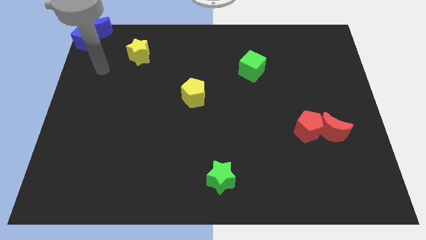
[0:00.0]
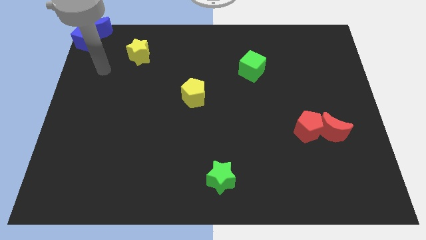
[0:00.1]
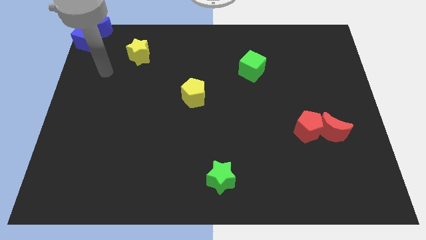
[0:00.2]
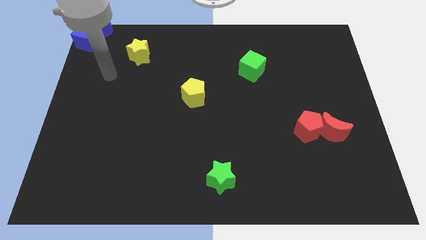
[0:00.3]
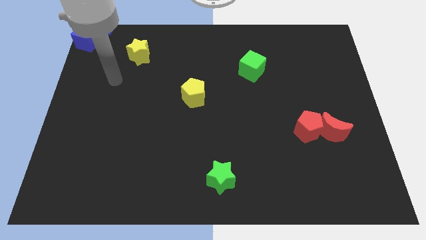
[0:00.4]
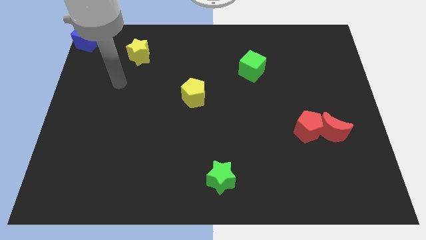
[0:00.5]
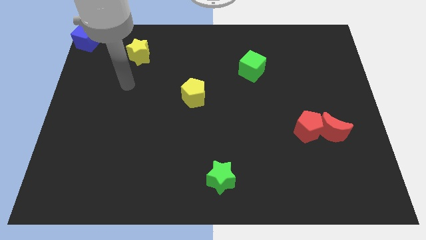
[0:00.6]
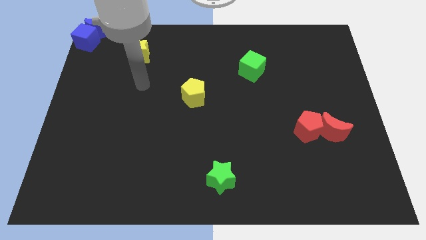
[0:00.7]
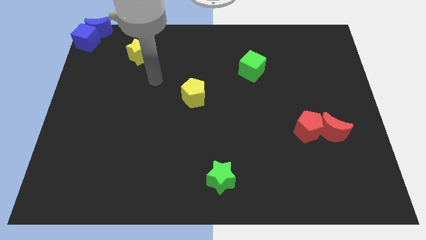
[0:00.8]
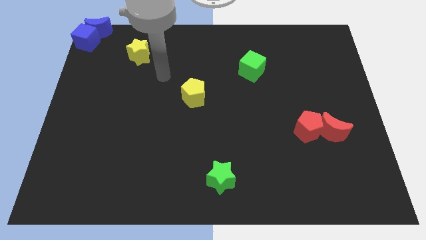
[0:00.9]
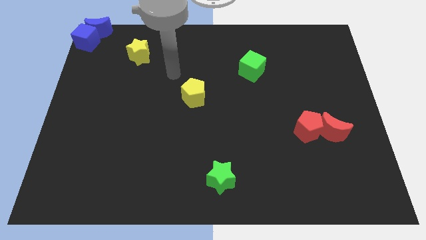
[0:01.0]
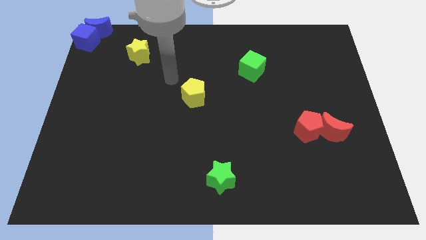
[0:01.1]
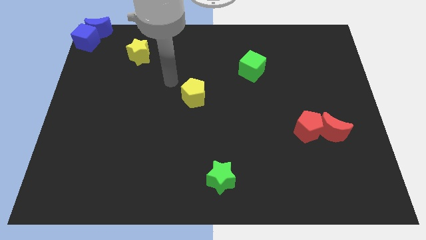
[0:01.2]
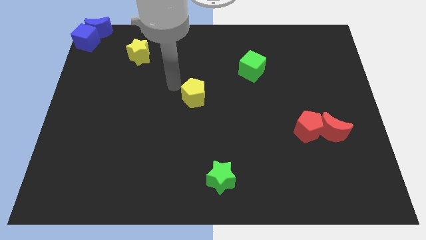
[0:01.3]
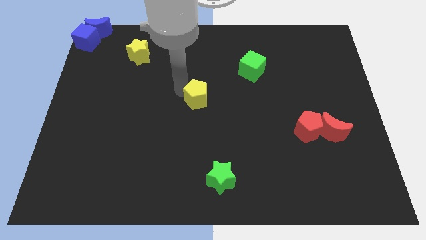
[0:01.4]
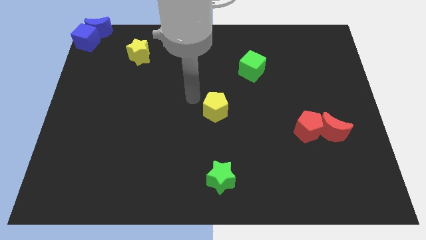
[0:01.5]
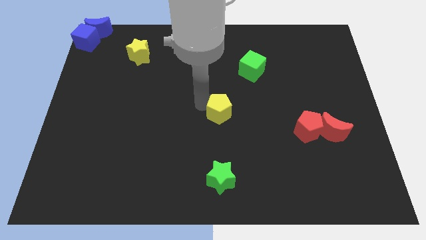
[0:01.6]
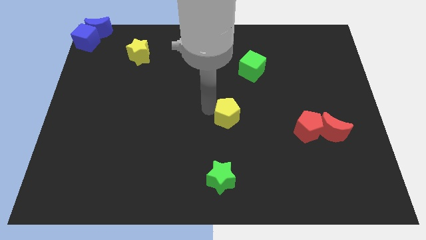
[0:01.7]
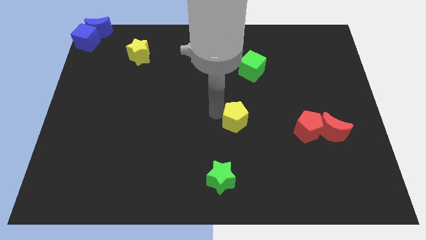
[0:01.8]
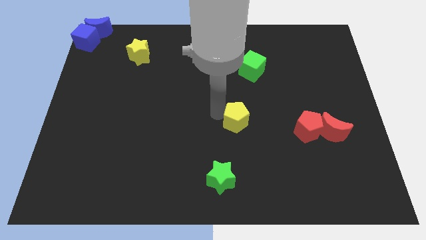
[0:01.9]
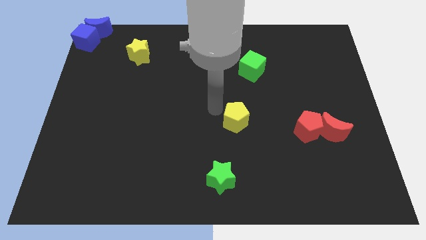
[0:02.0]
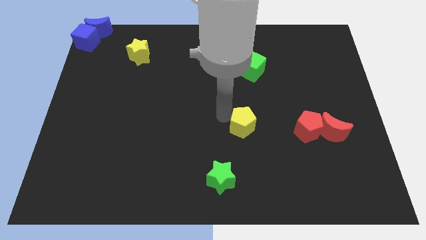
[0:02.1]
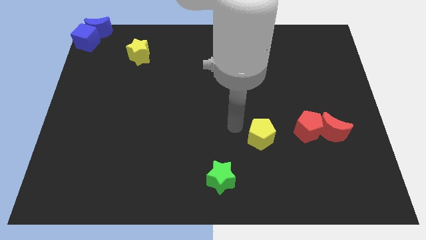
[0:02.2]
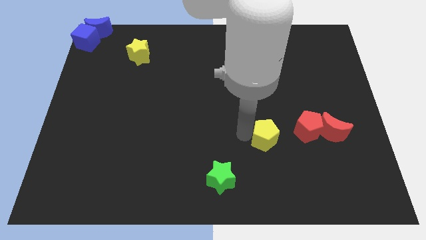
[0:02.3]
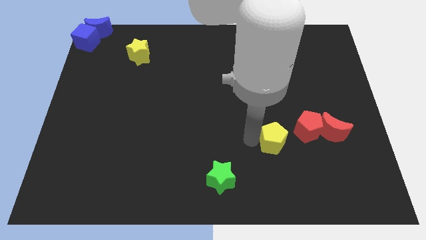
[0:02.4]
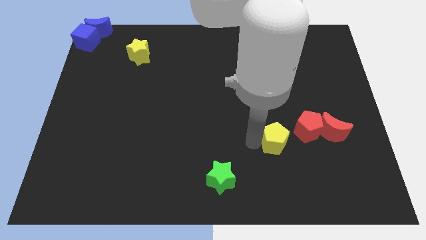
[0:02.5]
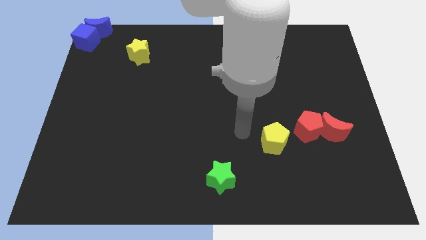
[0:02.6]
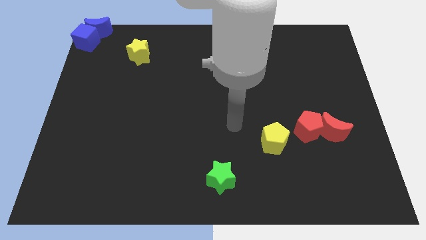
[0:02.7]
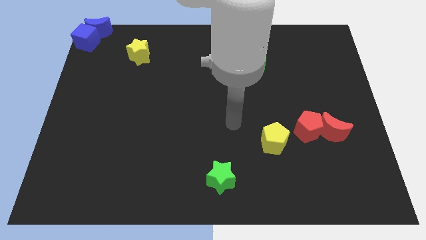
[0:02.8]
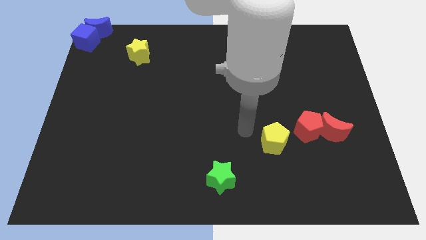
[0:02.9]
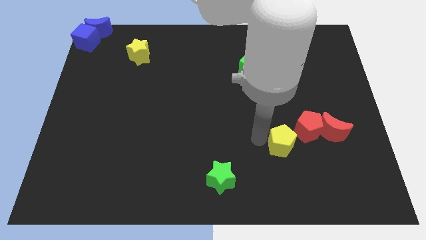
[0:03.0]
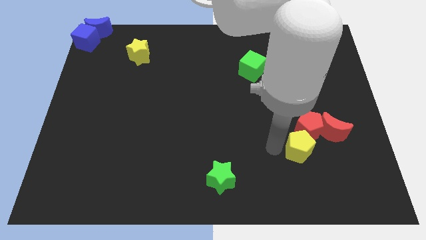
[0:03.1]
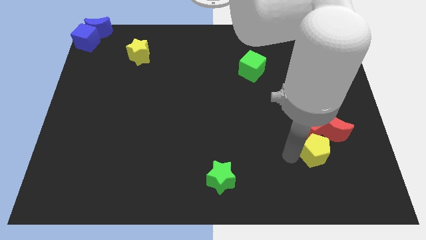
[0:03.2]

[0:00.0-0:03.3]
slide the yellow pentagon vertically below the red pentagon

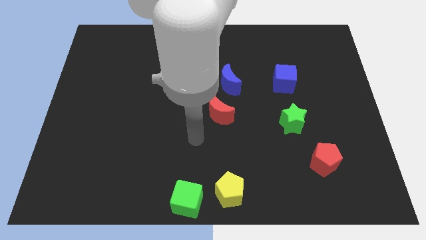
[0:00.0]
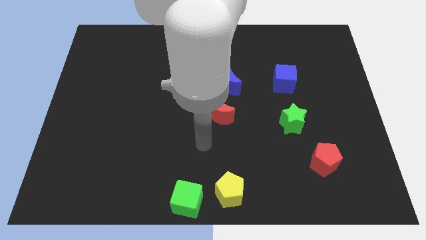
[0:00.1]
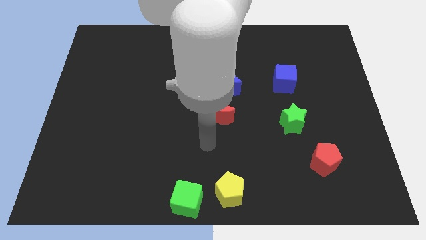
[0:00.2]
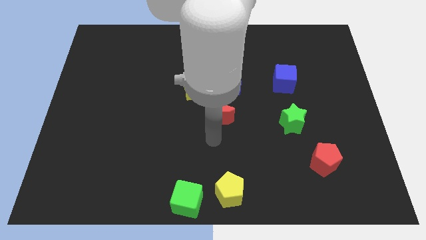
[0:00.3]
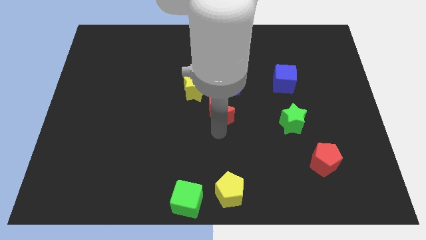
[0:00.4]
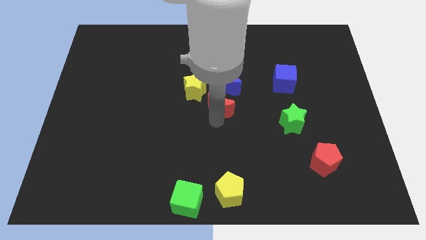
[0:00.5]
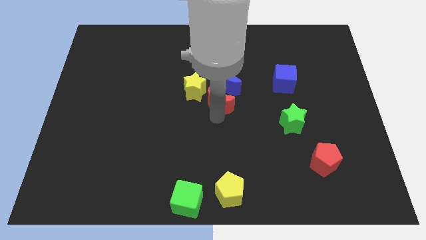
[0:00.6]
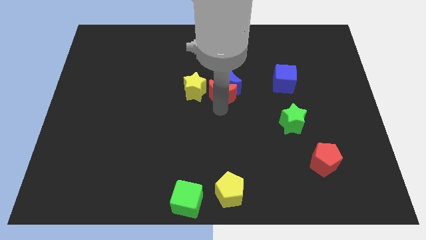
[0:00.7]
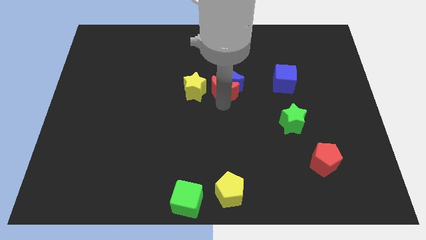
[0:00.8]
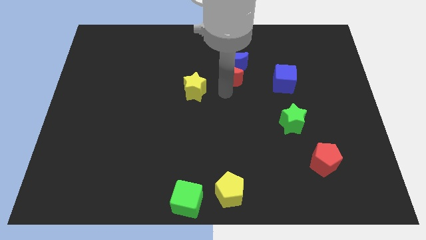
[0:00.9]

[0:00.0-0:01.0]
push the red crescent into the blue crescent

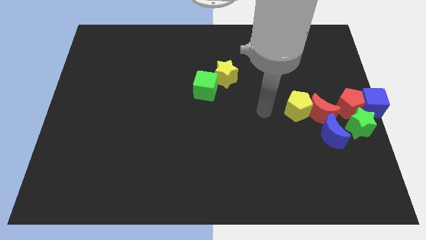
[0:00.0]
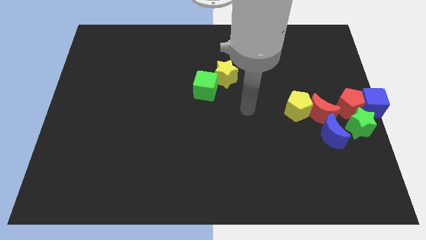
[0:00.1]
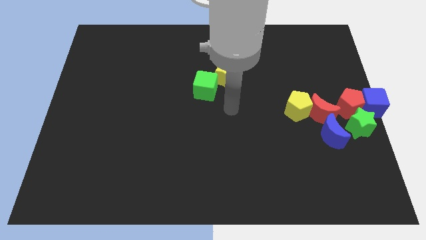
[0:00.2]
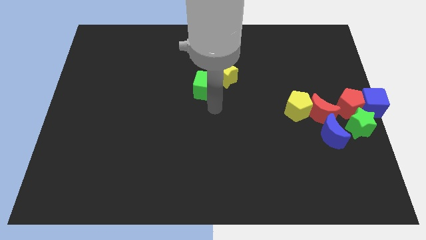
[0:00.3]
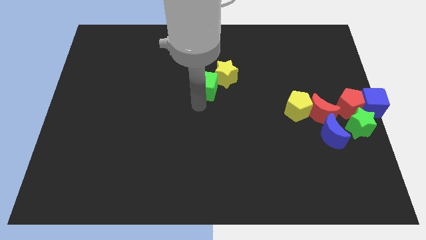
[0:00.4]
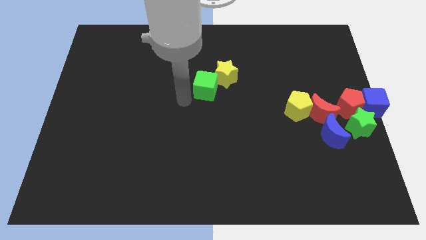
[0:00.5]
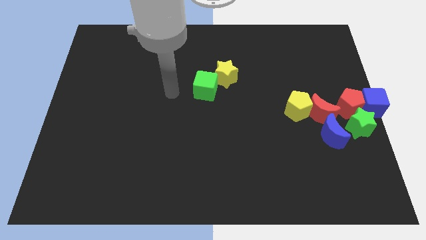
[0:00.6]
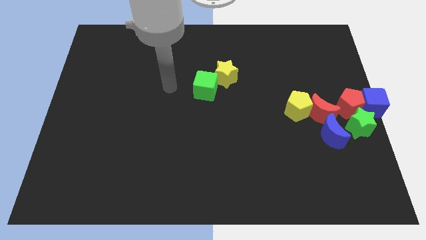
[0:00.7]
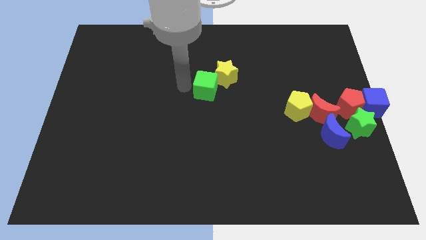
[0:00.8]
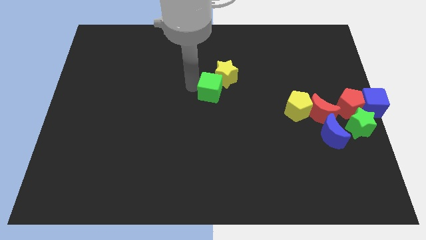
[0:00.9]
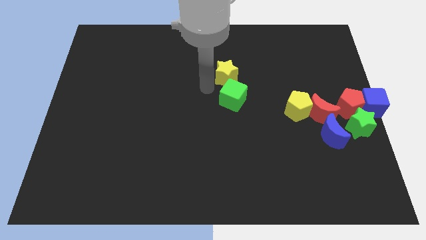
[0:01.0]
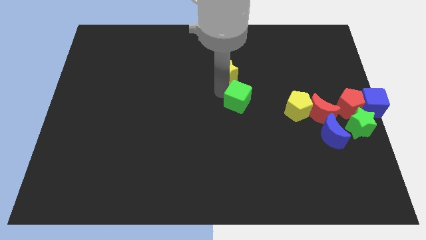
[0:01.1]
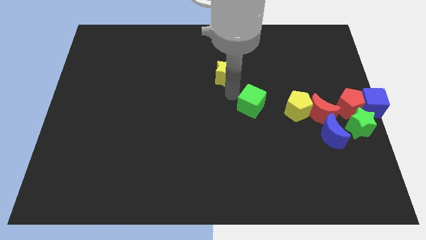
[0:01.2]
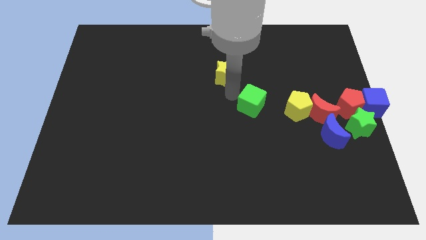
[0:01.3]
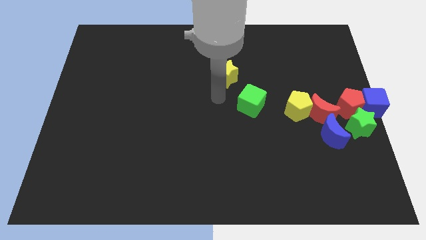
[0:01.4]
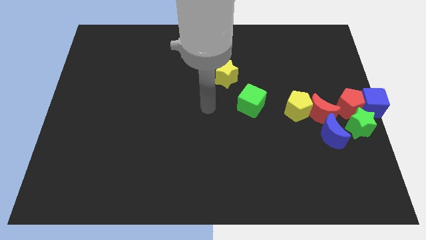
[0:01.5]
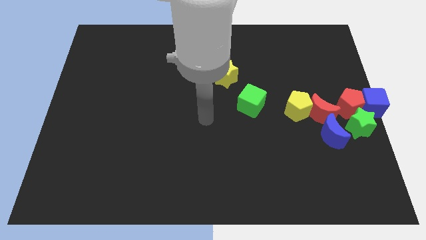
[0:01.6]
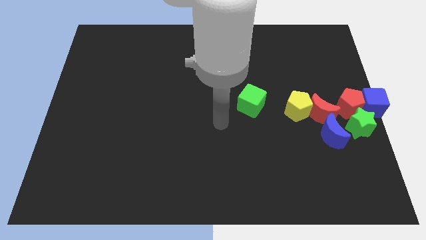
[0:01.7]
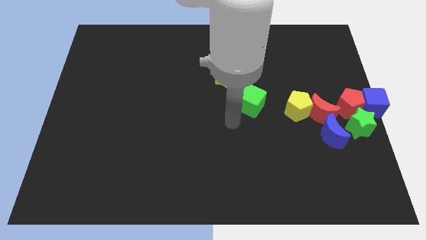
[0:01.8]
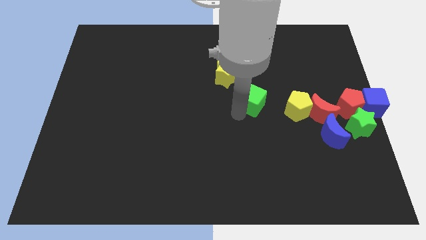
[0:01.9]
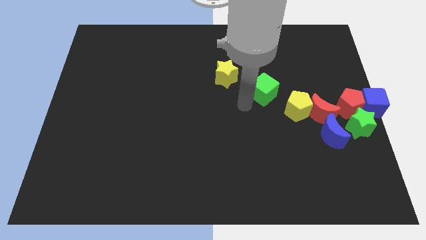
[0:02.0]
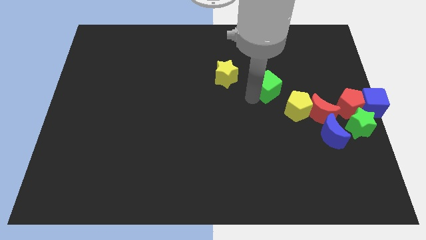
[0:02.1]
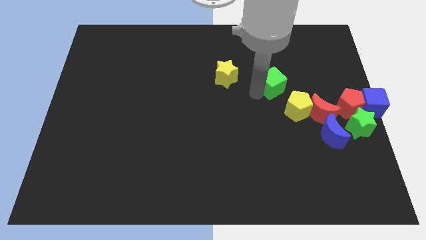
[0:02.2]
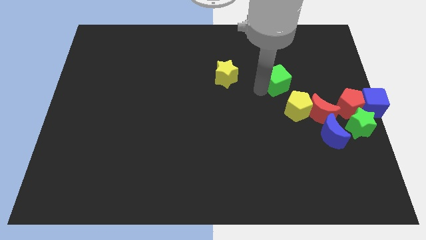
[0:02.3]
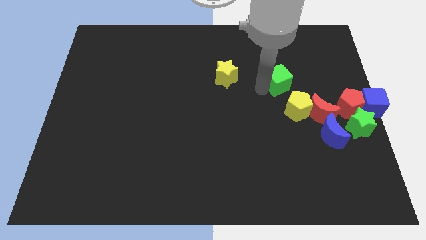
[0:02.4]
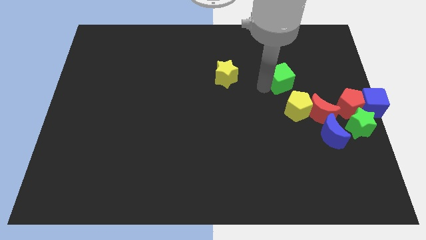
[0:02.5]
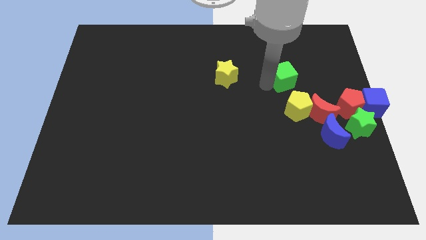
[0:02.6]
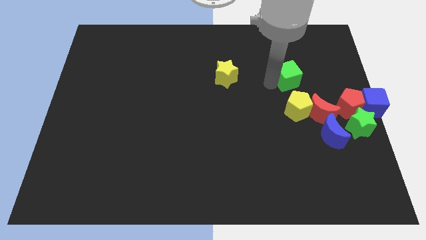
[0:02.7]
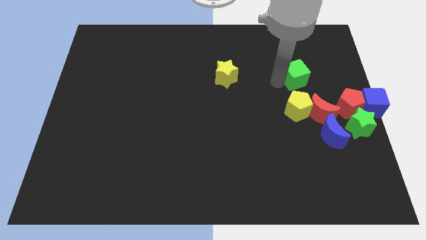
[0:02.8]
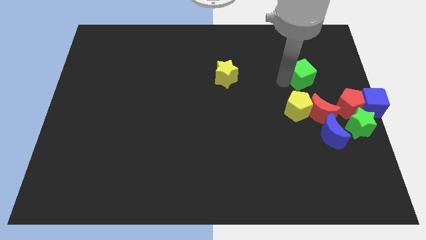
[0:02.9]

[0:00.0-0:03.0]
place the green cube above the yellow pentagon

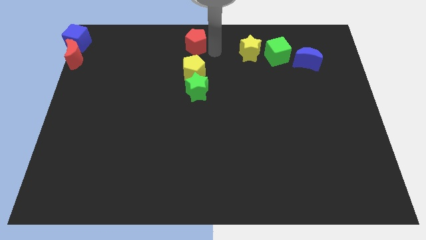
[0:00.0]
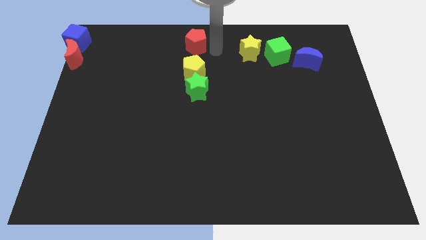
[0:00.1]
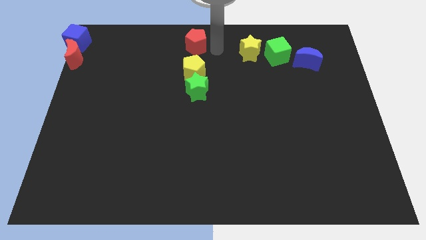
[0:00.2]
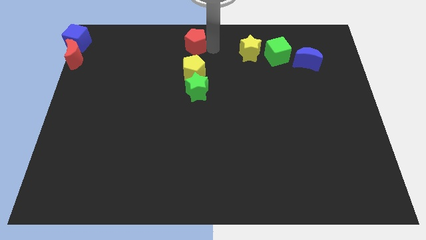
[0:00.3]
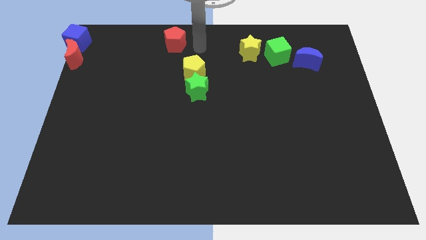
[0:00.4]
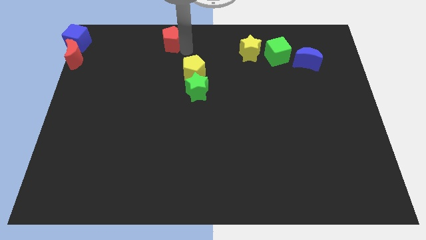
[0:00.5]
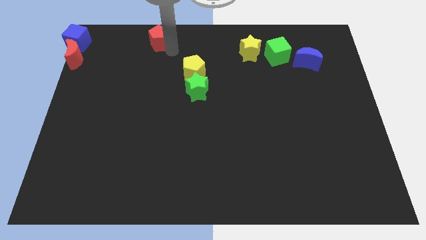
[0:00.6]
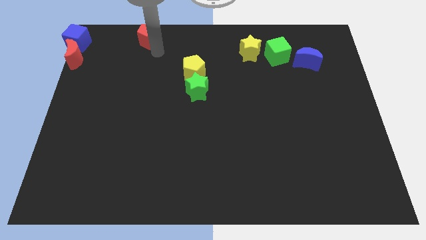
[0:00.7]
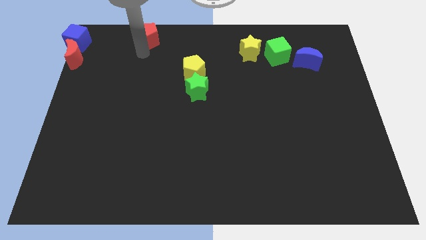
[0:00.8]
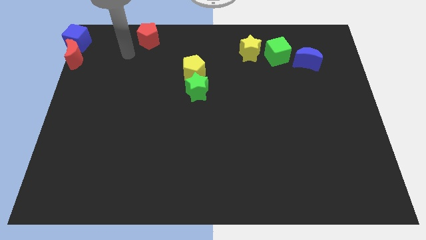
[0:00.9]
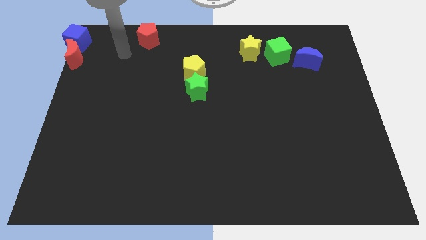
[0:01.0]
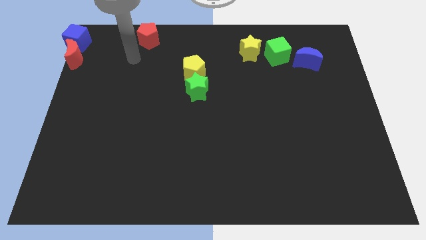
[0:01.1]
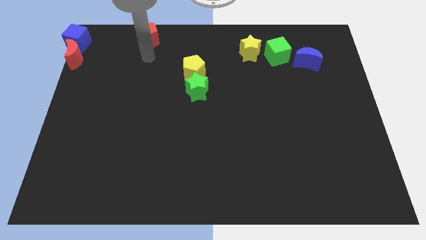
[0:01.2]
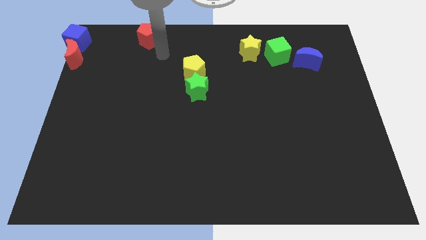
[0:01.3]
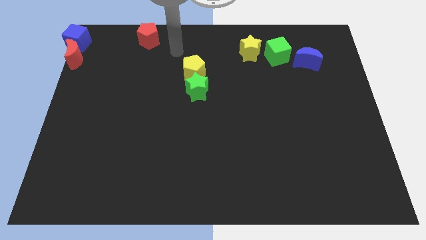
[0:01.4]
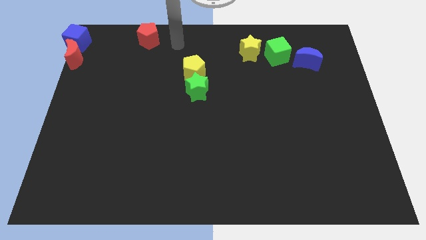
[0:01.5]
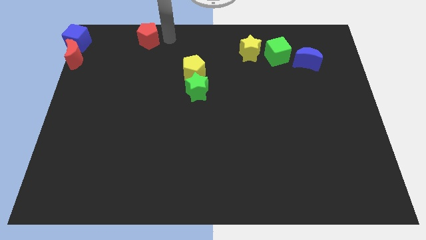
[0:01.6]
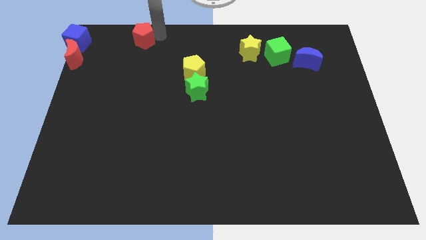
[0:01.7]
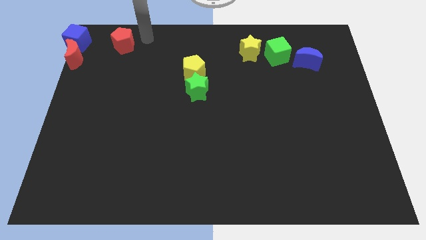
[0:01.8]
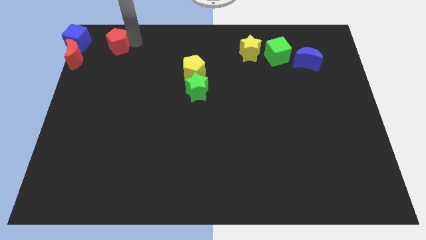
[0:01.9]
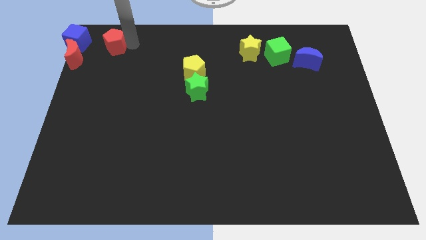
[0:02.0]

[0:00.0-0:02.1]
move the red pentagon parallel to the right of the blue cube
